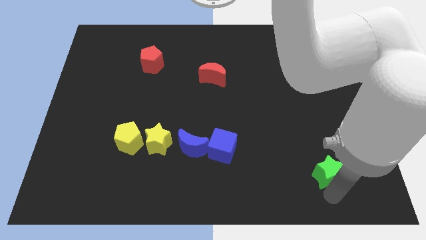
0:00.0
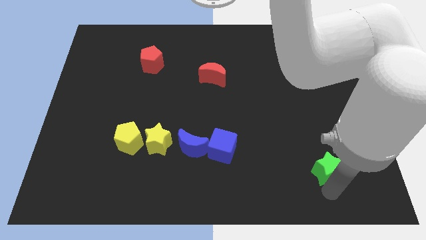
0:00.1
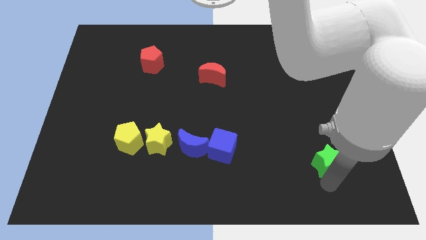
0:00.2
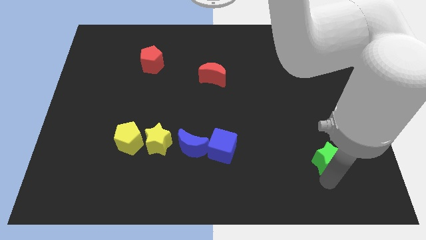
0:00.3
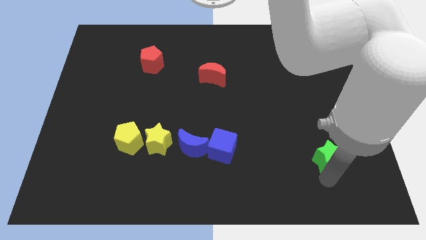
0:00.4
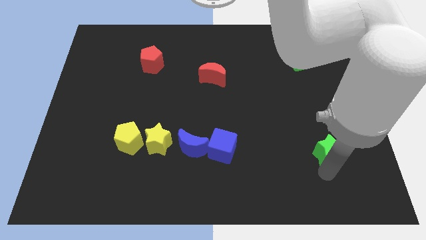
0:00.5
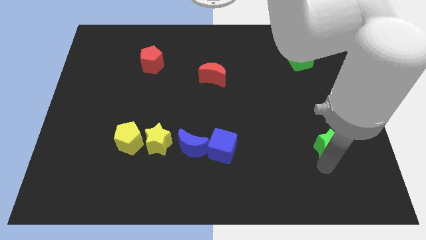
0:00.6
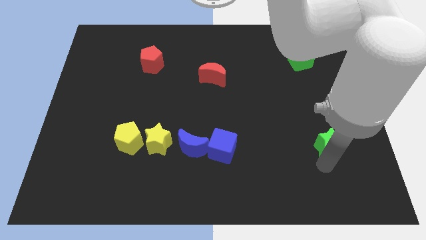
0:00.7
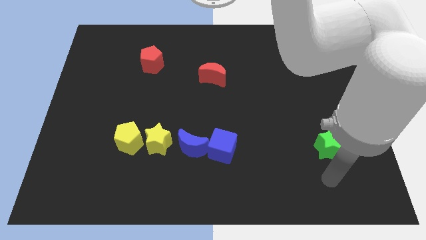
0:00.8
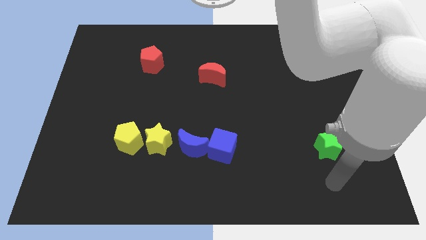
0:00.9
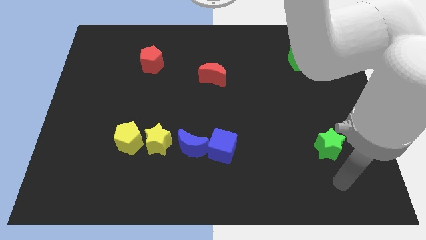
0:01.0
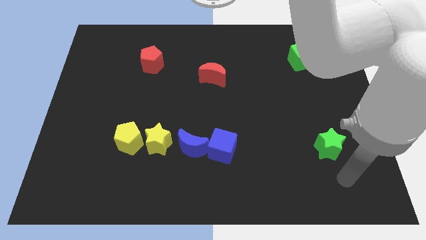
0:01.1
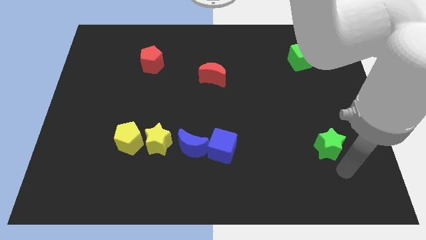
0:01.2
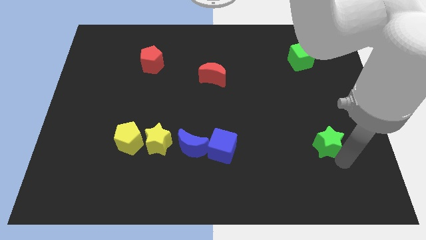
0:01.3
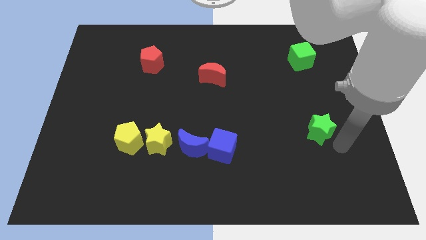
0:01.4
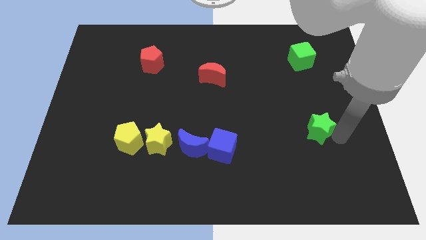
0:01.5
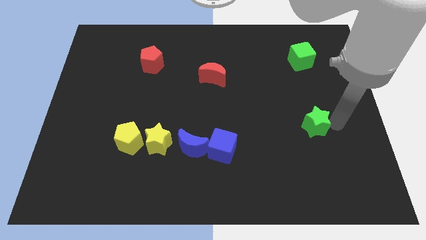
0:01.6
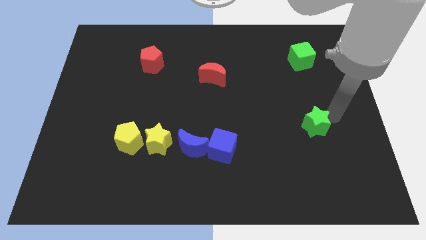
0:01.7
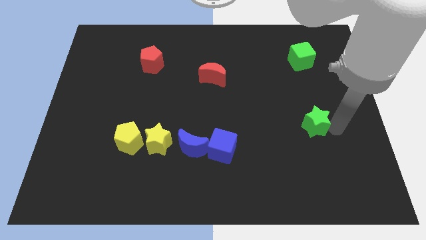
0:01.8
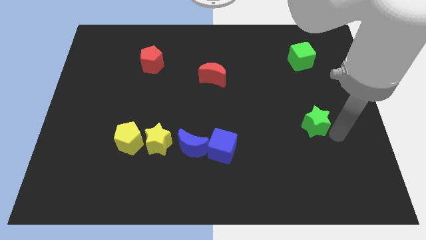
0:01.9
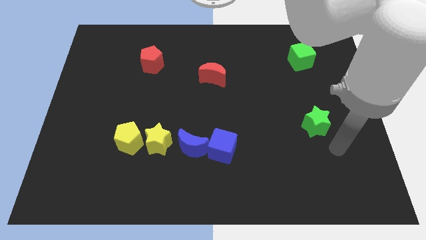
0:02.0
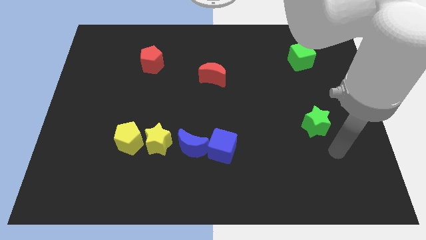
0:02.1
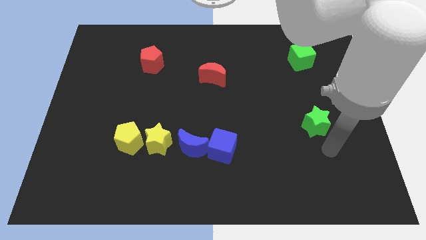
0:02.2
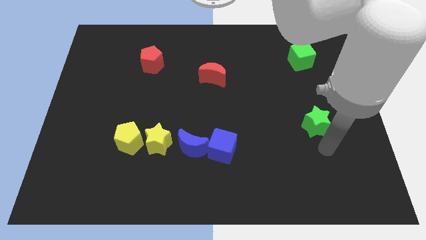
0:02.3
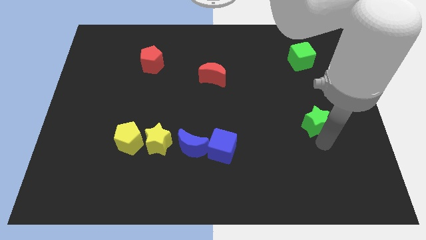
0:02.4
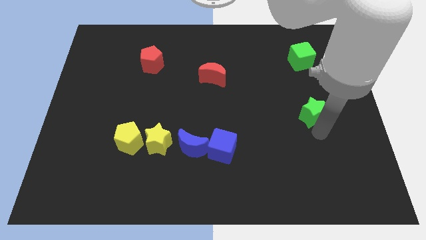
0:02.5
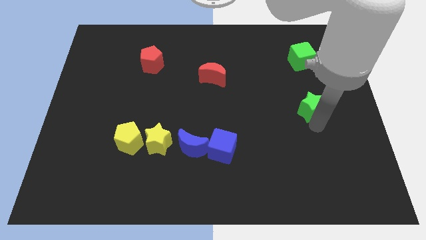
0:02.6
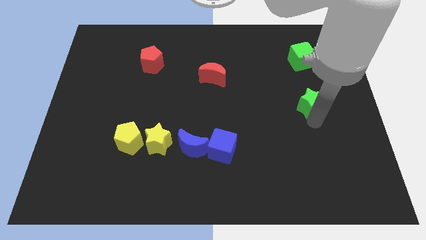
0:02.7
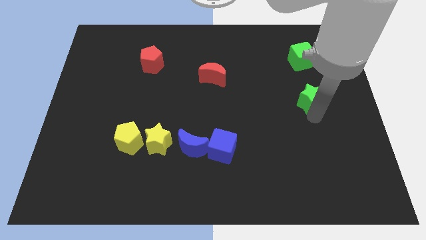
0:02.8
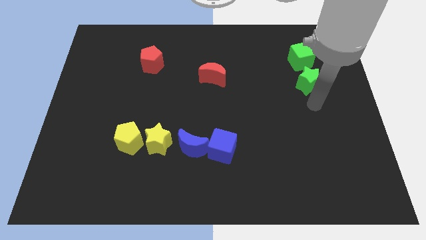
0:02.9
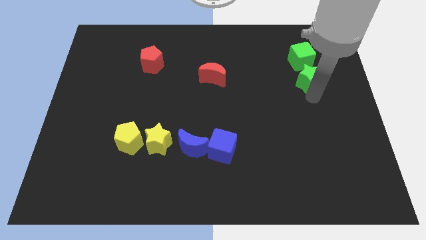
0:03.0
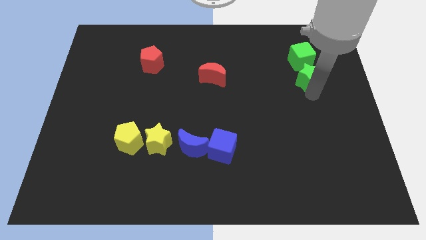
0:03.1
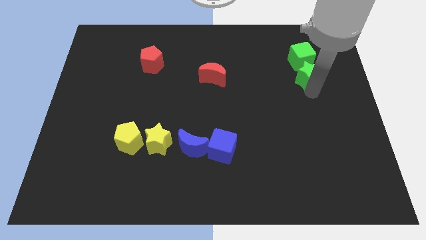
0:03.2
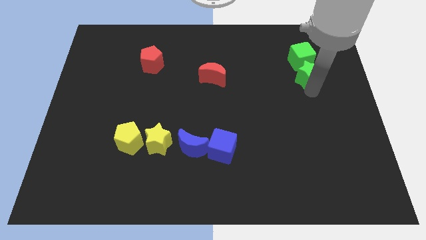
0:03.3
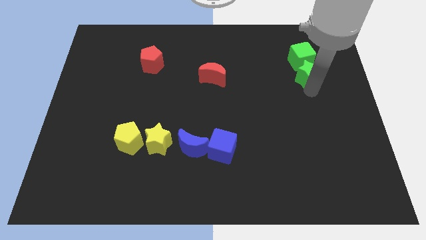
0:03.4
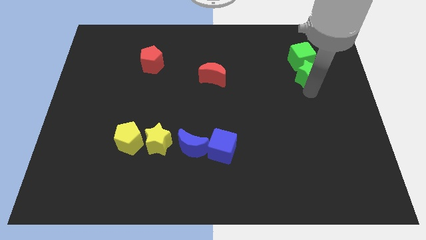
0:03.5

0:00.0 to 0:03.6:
push green star below green cube

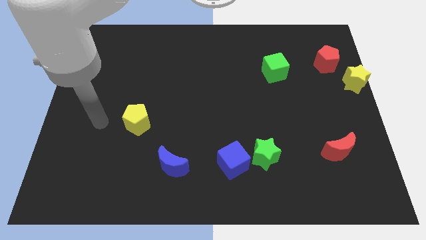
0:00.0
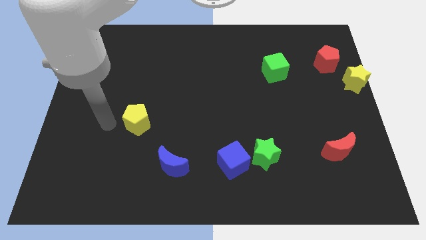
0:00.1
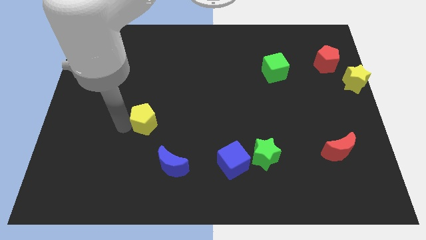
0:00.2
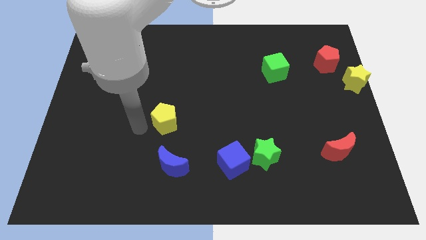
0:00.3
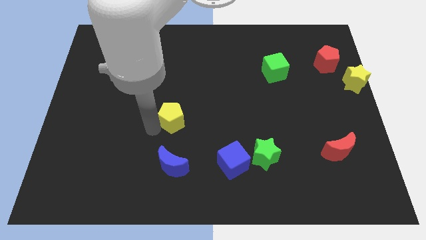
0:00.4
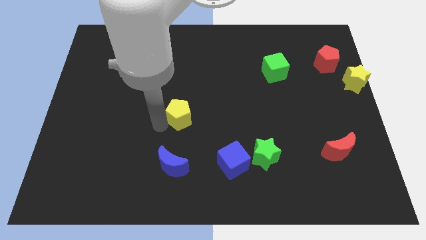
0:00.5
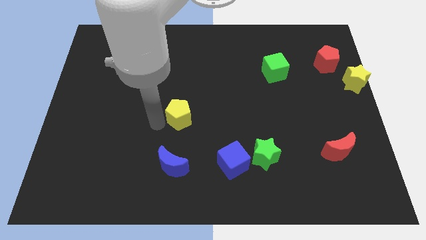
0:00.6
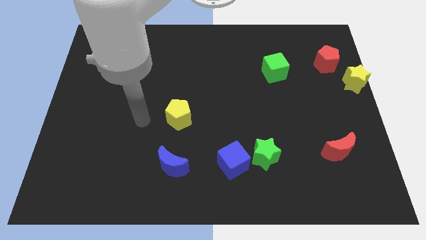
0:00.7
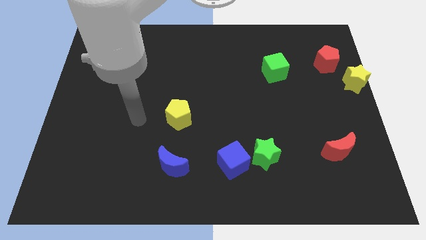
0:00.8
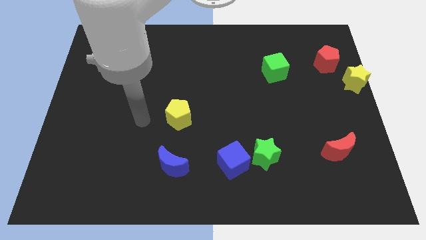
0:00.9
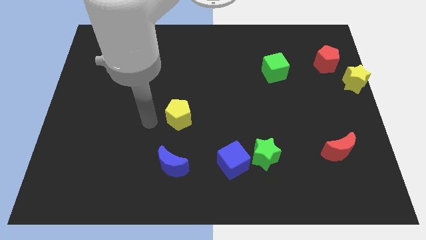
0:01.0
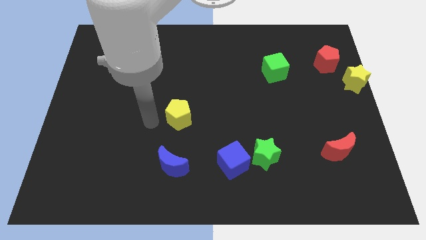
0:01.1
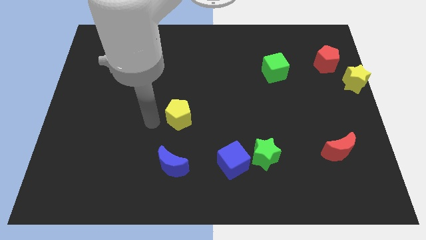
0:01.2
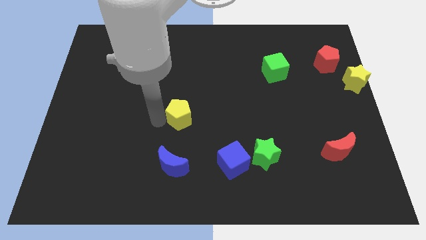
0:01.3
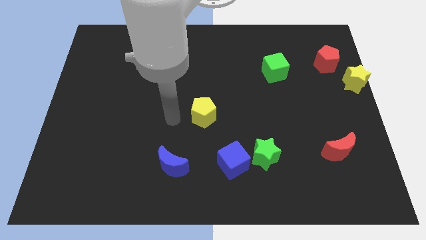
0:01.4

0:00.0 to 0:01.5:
move the yellow pentagon to the middle of the board

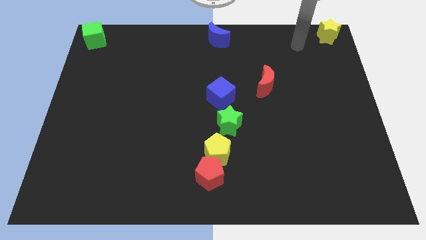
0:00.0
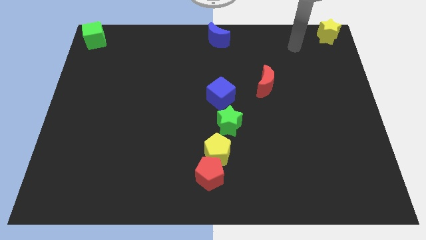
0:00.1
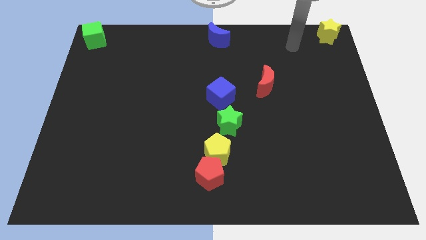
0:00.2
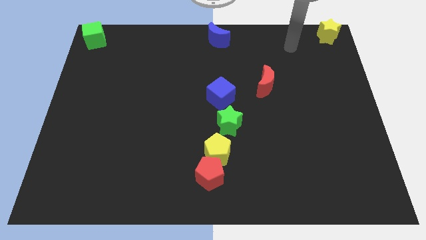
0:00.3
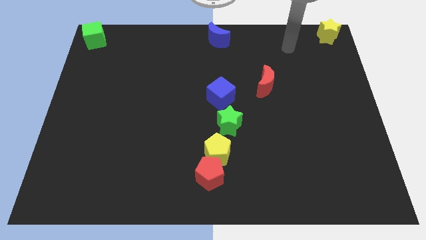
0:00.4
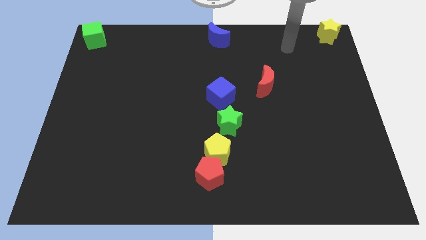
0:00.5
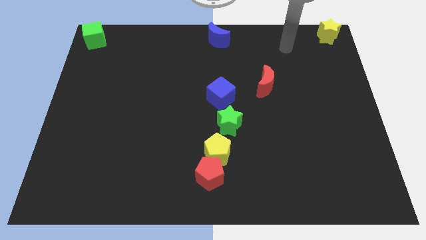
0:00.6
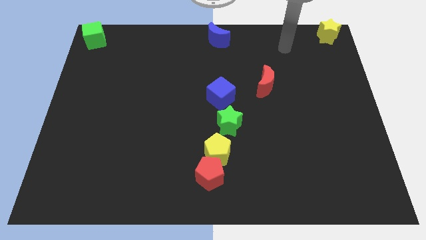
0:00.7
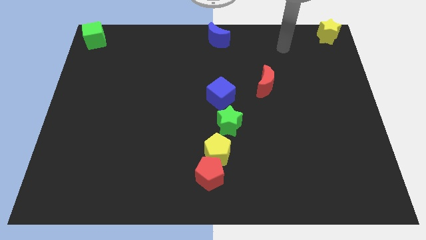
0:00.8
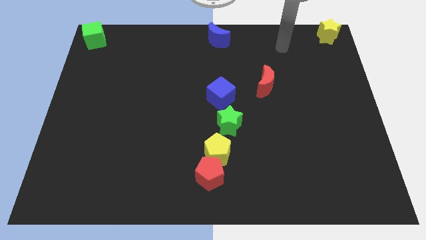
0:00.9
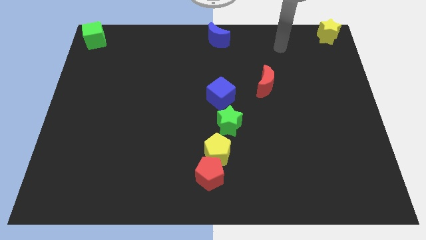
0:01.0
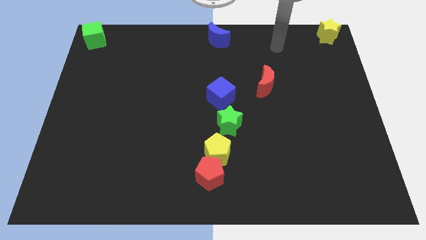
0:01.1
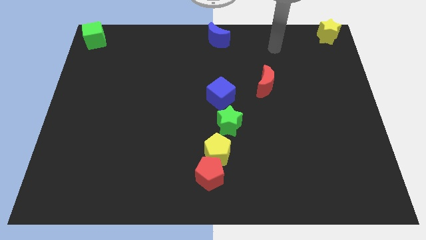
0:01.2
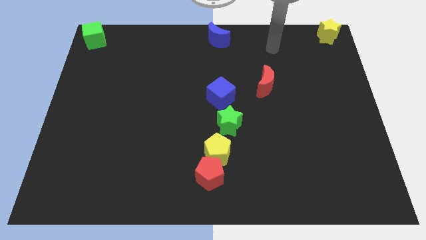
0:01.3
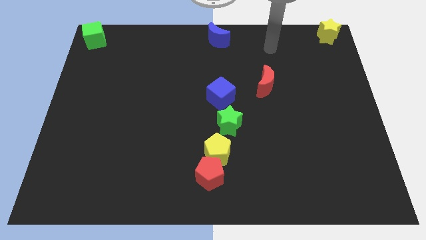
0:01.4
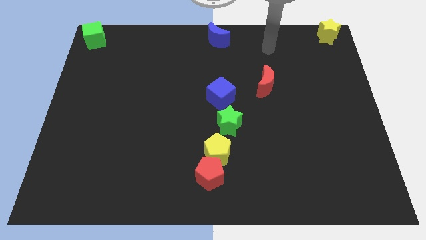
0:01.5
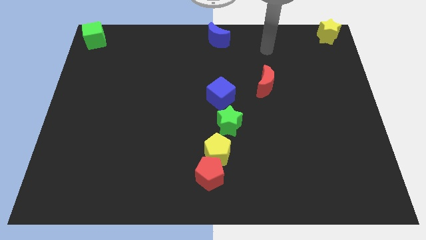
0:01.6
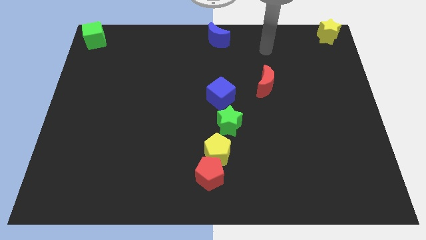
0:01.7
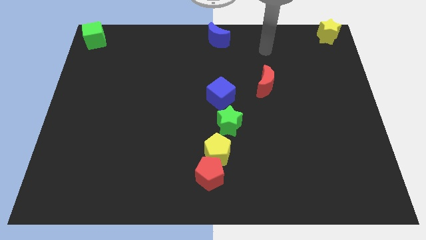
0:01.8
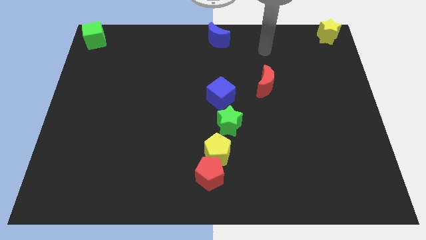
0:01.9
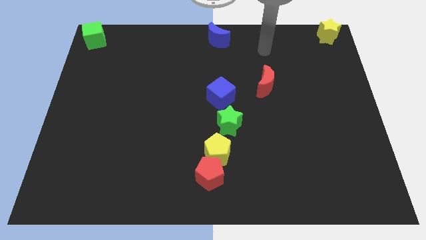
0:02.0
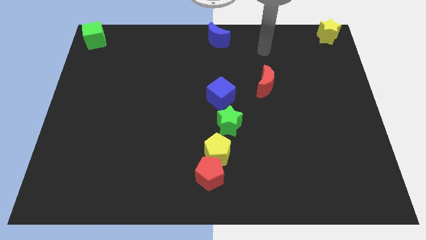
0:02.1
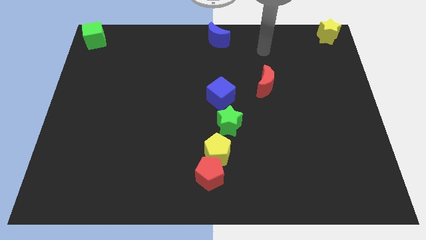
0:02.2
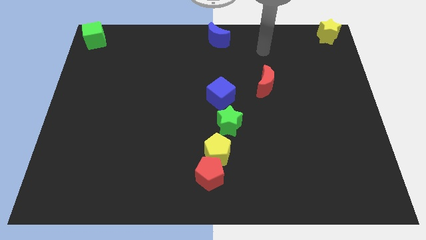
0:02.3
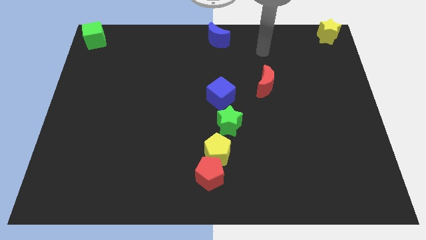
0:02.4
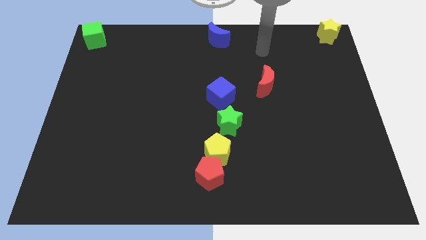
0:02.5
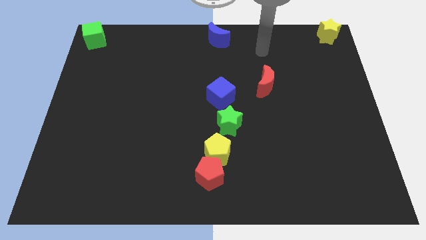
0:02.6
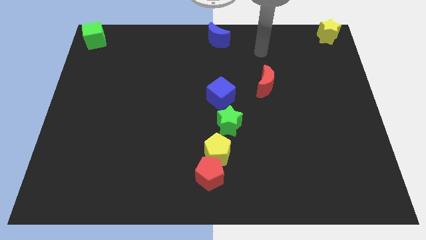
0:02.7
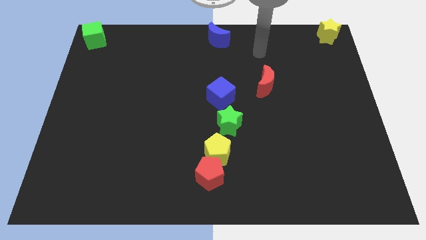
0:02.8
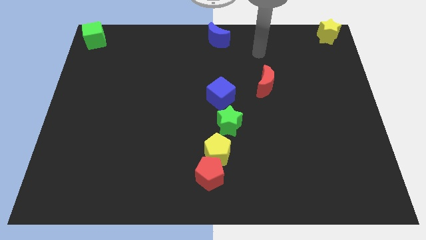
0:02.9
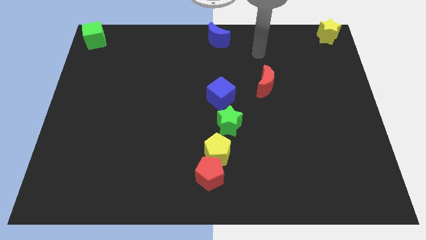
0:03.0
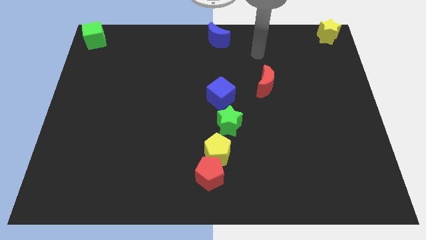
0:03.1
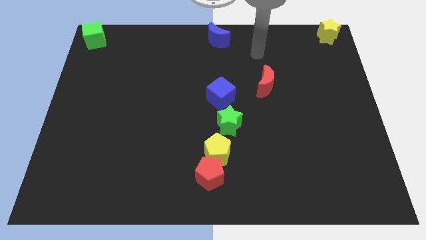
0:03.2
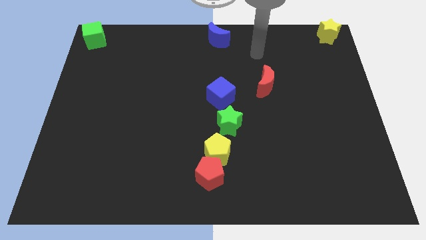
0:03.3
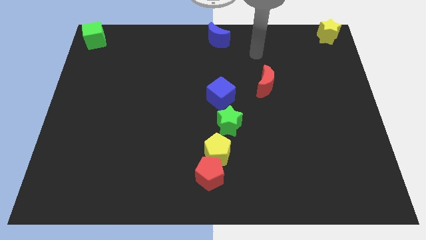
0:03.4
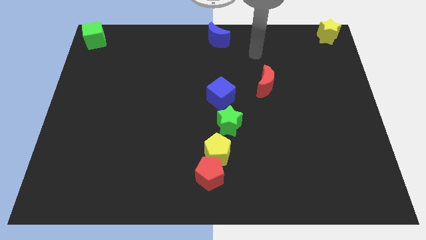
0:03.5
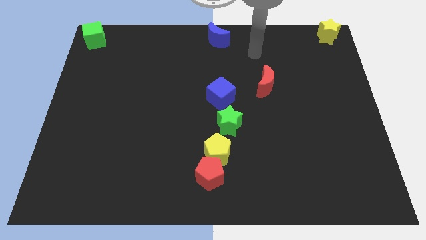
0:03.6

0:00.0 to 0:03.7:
move your arm above the red moon at top side

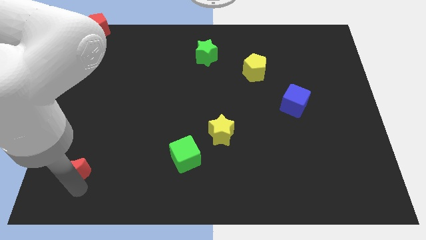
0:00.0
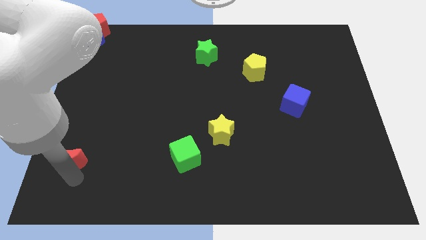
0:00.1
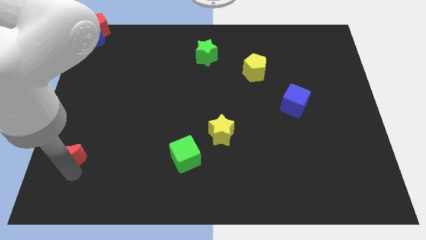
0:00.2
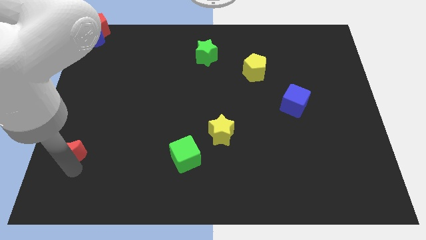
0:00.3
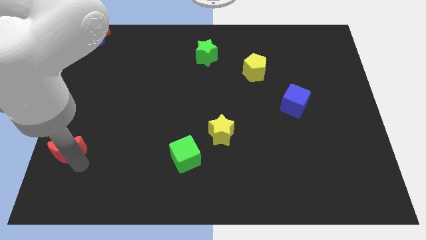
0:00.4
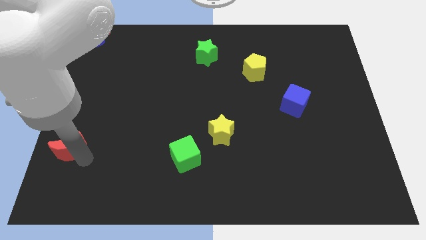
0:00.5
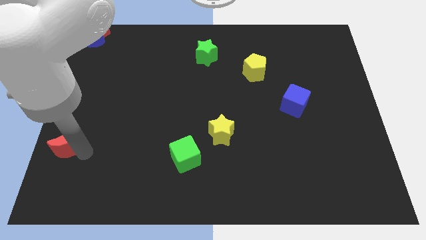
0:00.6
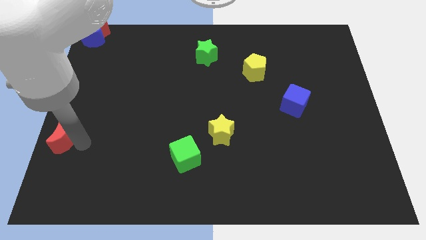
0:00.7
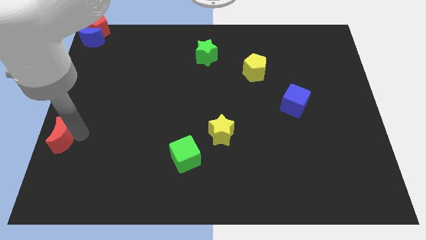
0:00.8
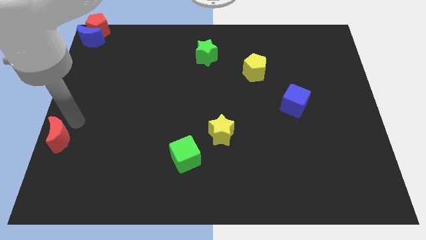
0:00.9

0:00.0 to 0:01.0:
push red moon slightly upwards
